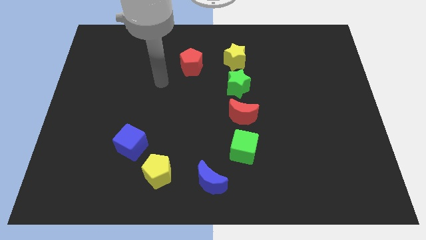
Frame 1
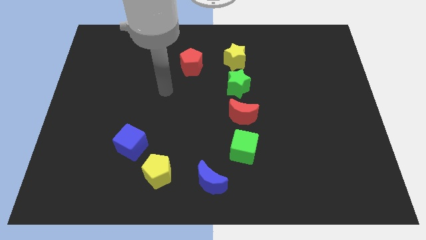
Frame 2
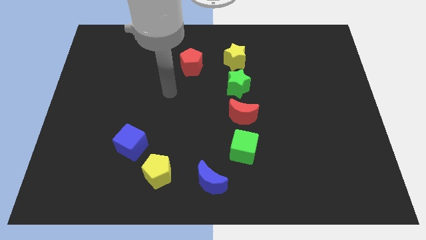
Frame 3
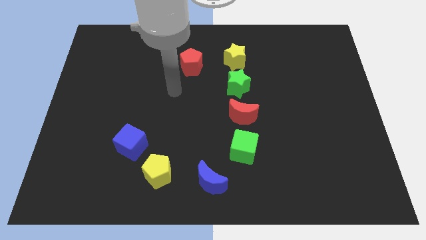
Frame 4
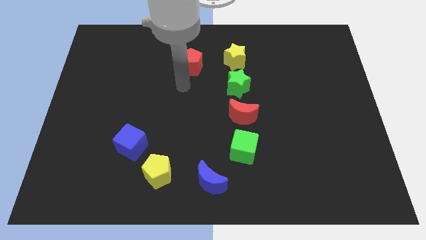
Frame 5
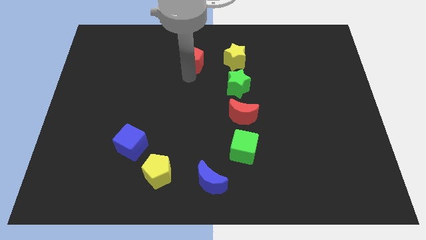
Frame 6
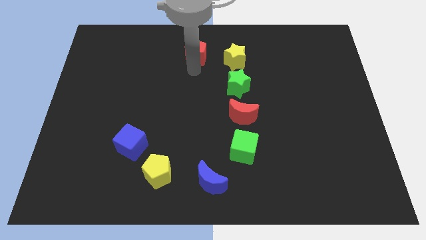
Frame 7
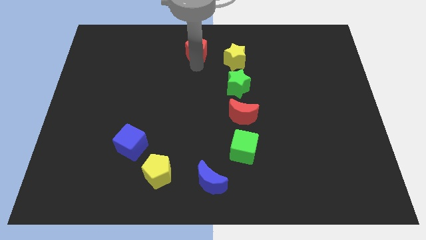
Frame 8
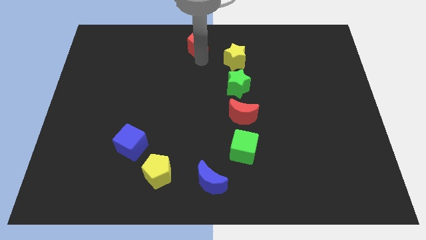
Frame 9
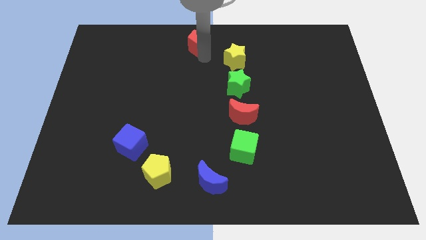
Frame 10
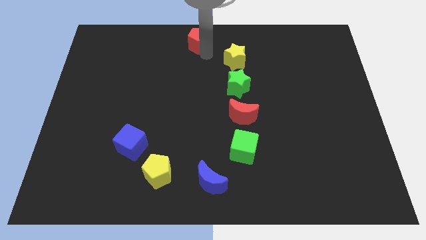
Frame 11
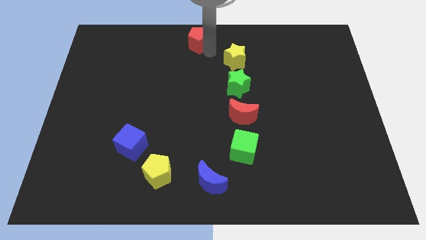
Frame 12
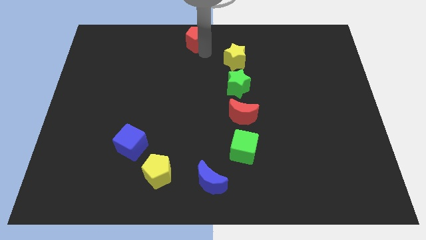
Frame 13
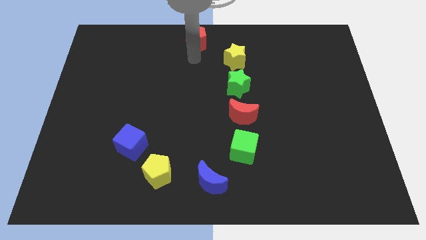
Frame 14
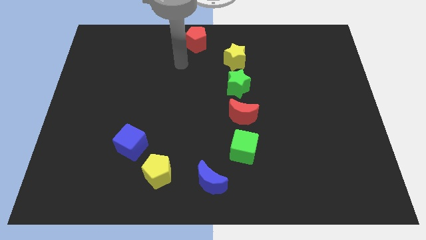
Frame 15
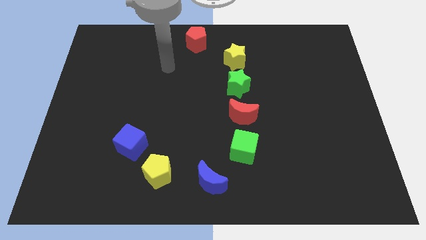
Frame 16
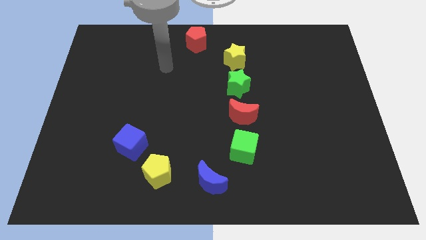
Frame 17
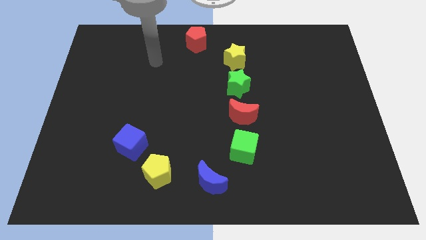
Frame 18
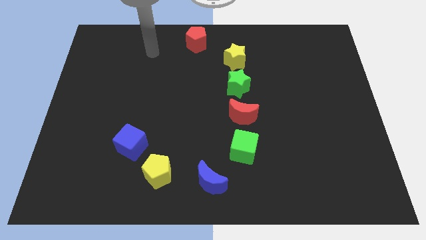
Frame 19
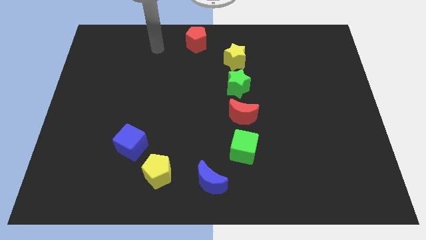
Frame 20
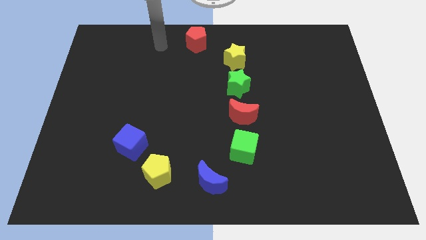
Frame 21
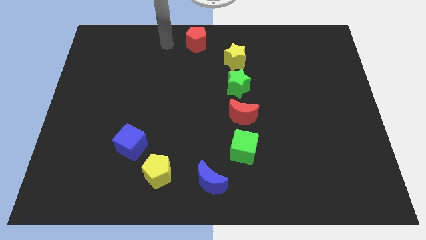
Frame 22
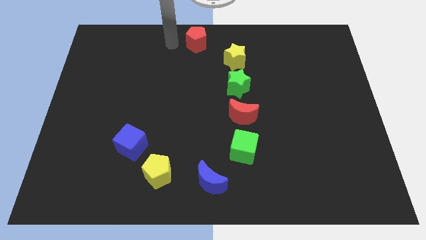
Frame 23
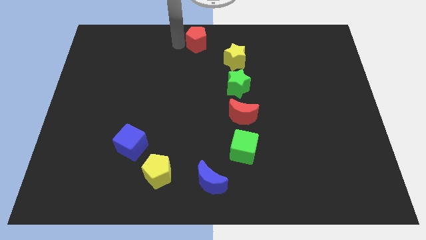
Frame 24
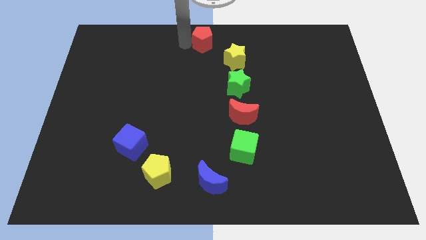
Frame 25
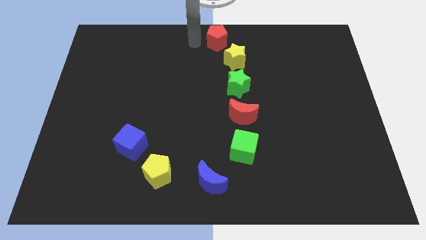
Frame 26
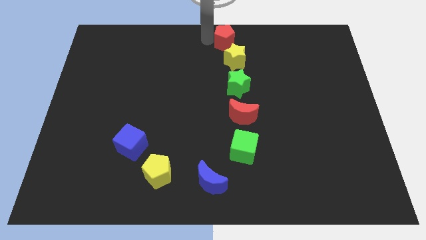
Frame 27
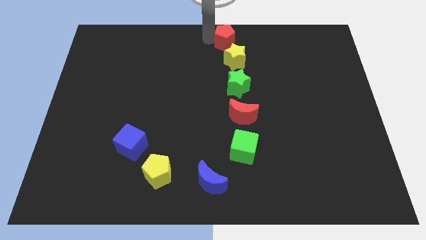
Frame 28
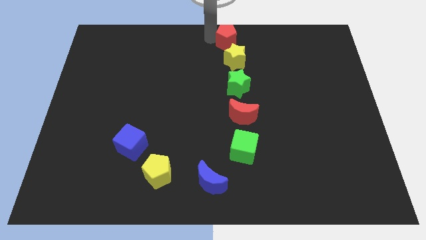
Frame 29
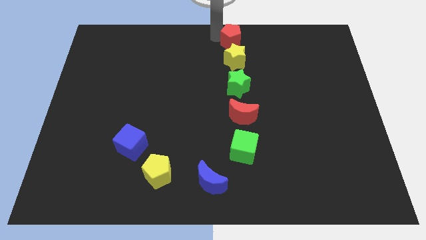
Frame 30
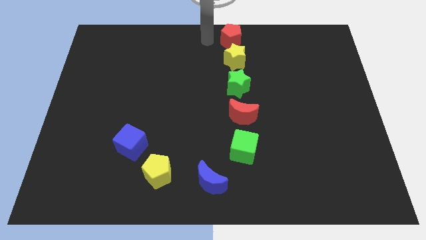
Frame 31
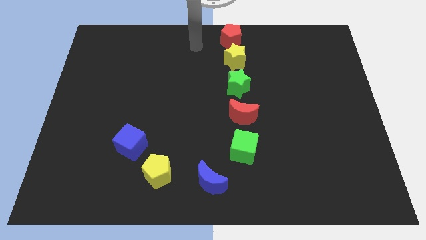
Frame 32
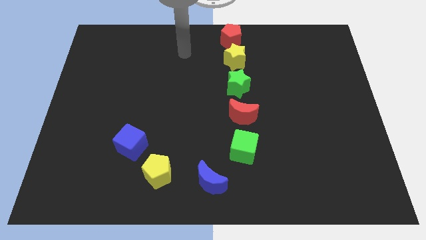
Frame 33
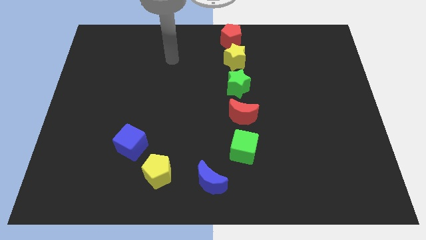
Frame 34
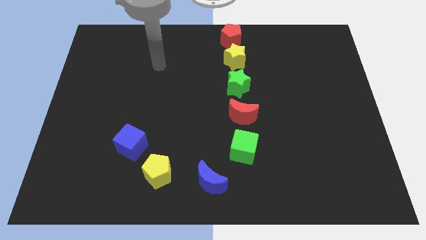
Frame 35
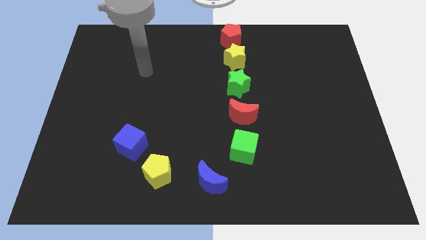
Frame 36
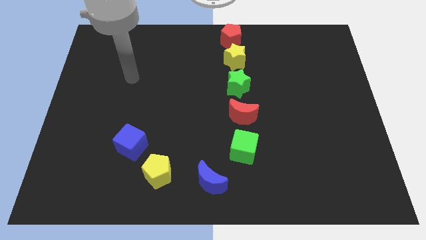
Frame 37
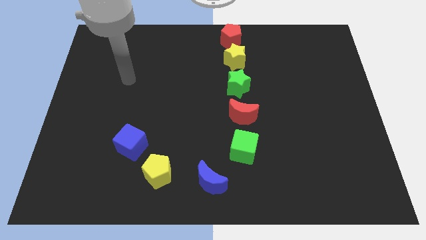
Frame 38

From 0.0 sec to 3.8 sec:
place the red pentagon above the yellow star

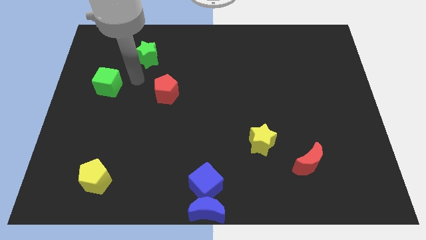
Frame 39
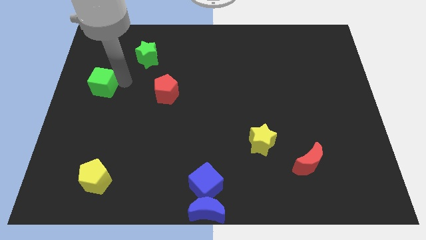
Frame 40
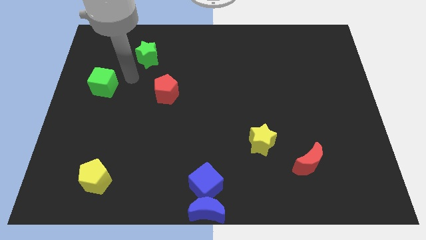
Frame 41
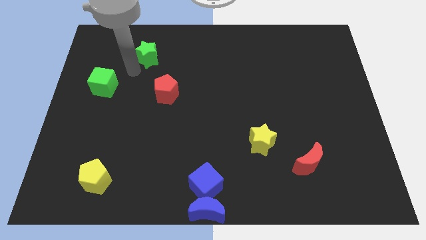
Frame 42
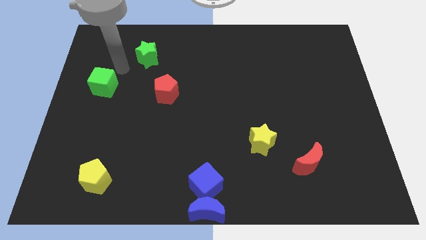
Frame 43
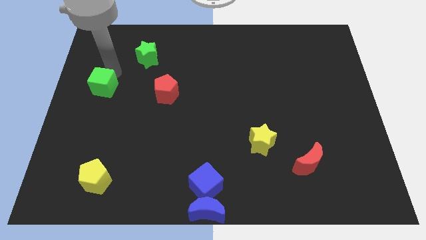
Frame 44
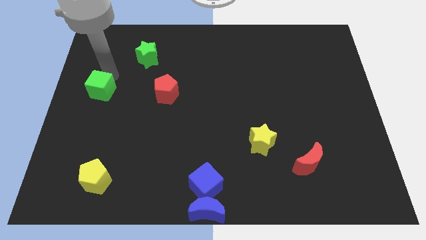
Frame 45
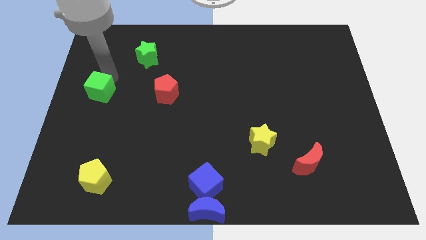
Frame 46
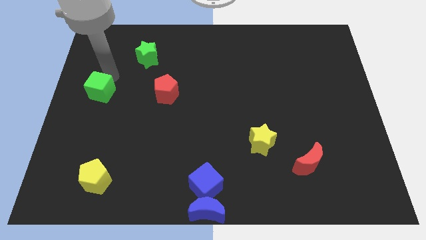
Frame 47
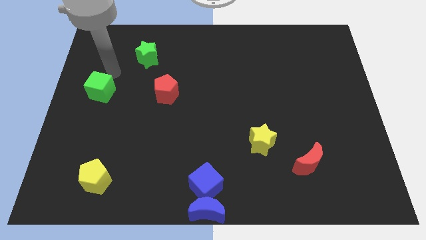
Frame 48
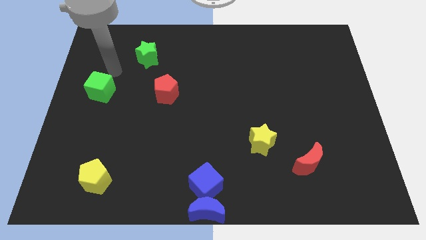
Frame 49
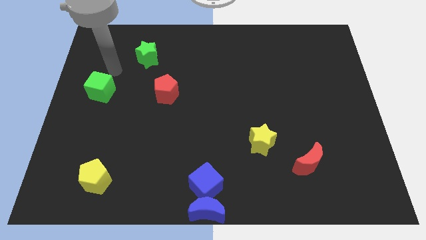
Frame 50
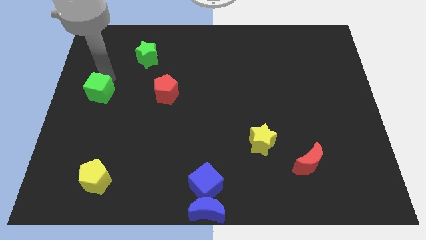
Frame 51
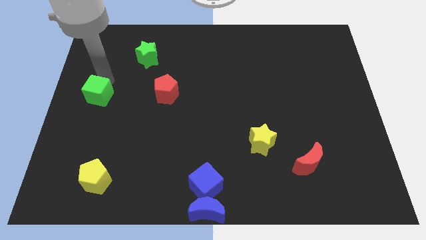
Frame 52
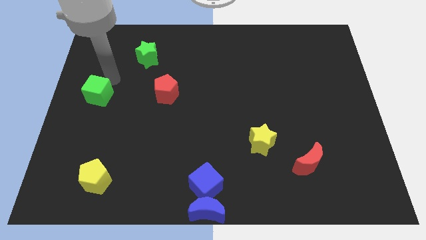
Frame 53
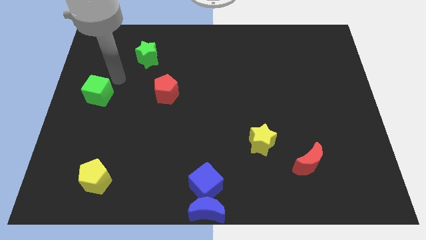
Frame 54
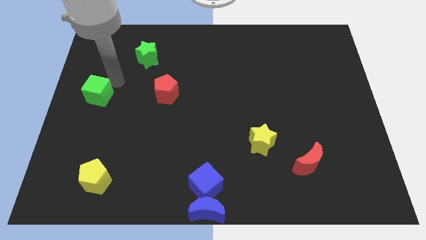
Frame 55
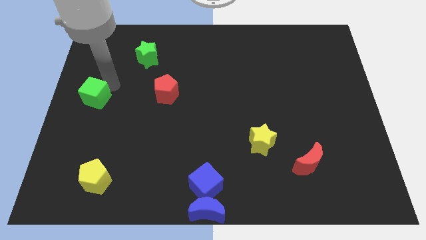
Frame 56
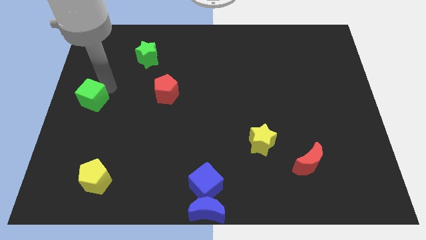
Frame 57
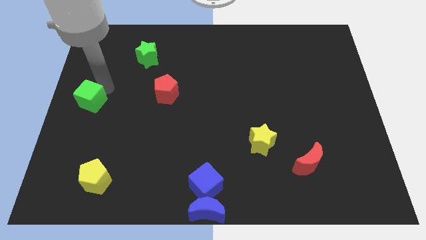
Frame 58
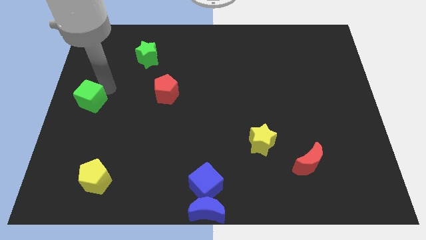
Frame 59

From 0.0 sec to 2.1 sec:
move the green cube to the center left of the board

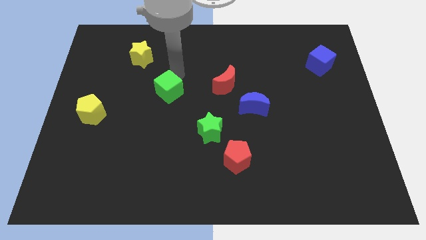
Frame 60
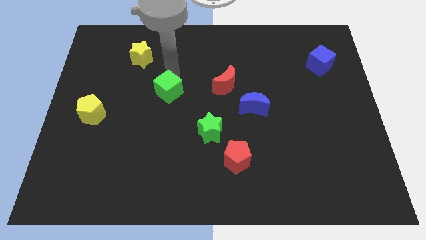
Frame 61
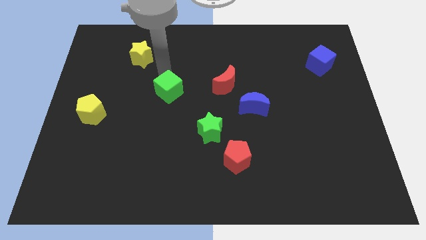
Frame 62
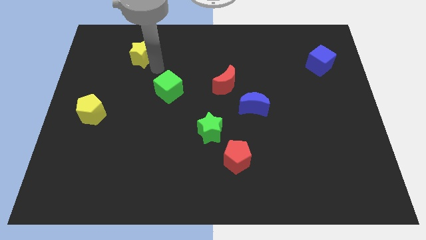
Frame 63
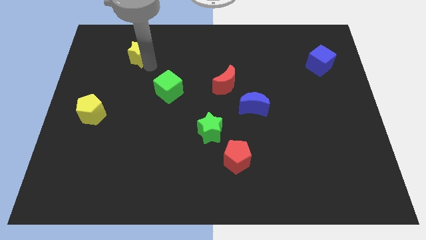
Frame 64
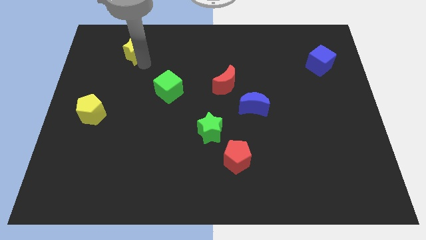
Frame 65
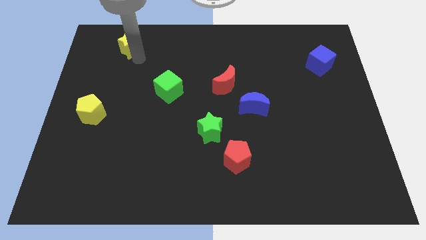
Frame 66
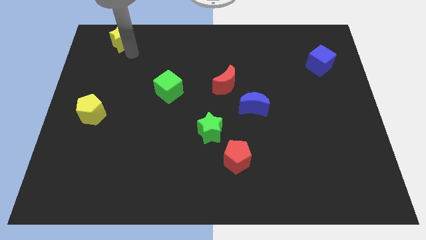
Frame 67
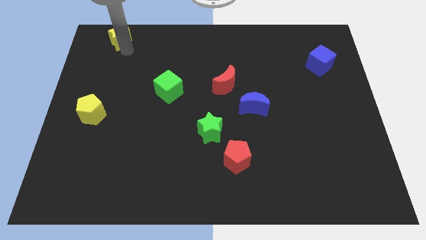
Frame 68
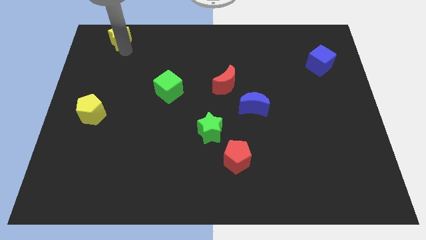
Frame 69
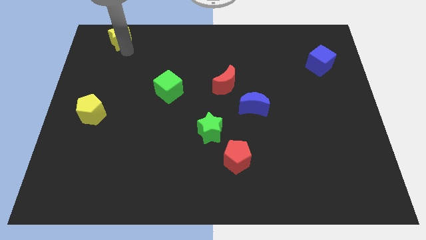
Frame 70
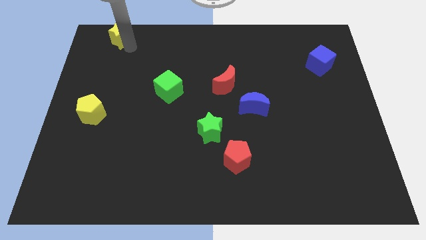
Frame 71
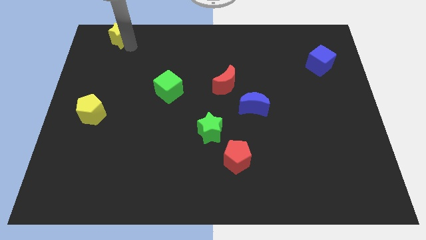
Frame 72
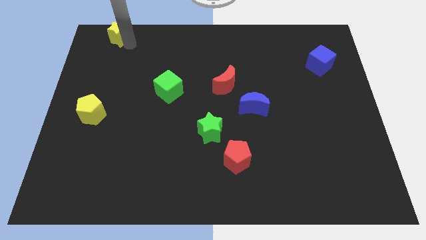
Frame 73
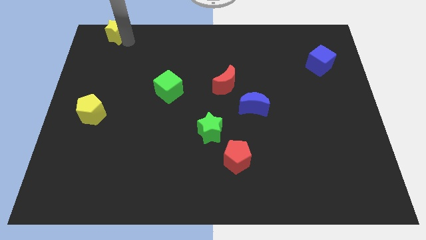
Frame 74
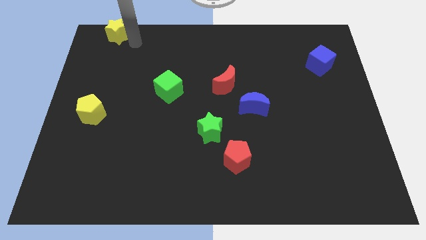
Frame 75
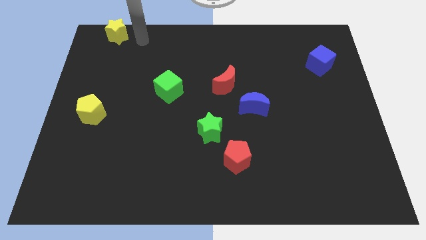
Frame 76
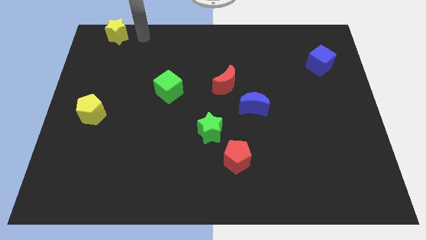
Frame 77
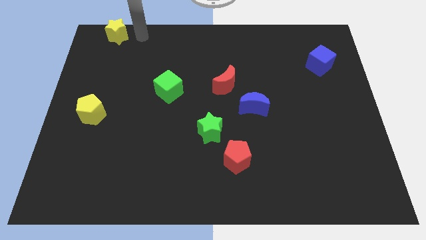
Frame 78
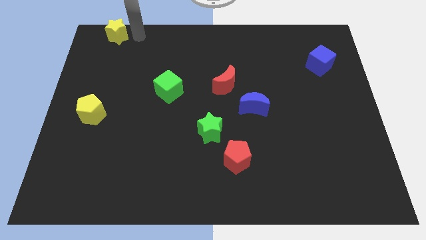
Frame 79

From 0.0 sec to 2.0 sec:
move yellow star to the top left of the board

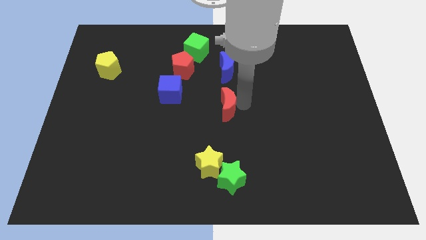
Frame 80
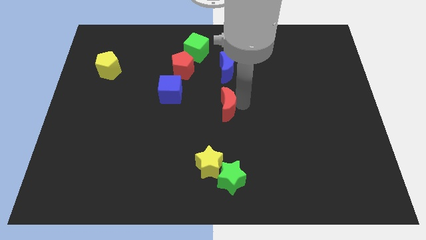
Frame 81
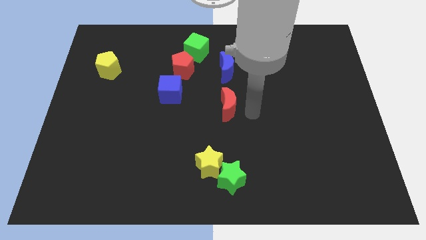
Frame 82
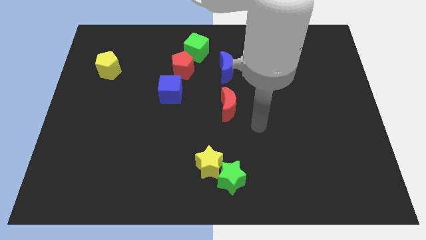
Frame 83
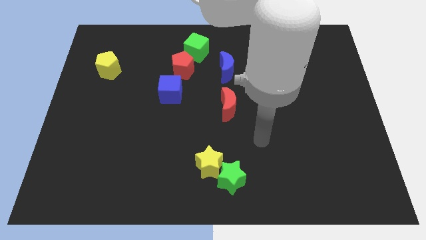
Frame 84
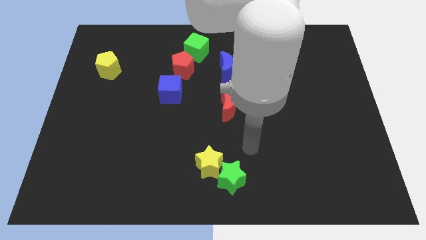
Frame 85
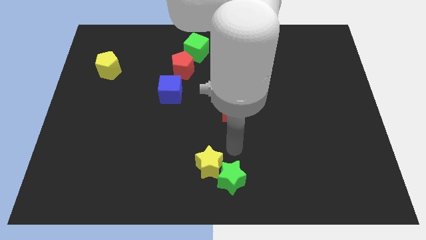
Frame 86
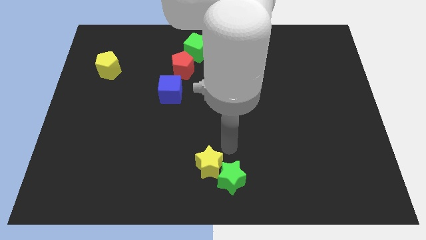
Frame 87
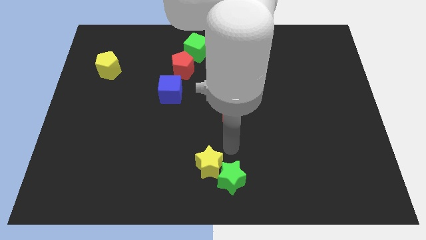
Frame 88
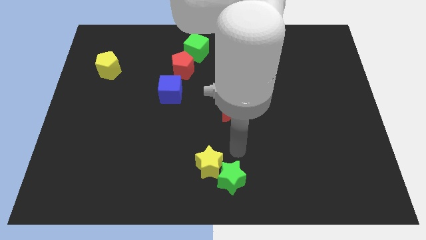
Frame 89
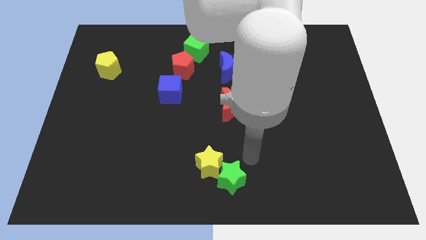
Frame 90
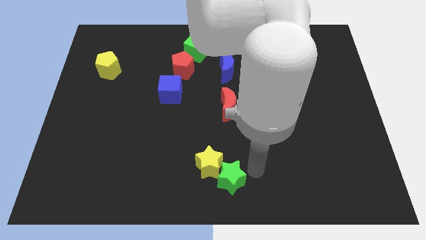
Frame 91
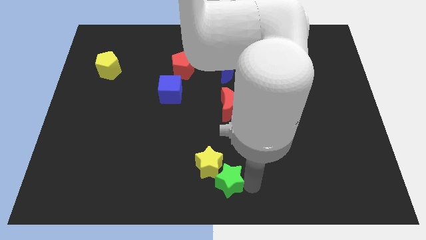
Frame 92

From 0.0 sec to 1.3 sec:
move the arm to the right of the green star
